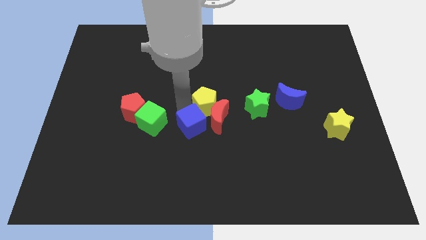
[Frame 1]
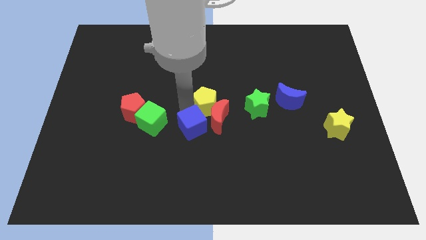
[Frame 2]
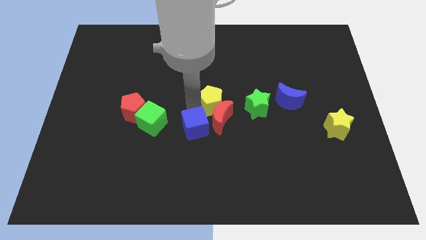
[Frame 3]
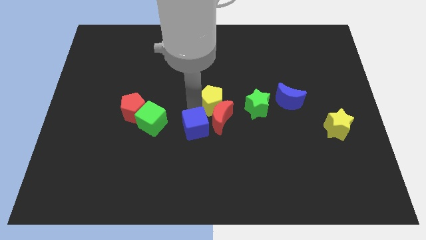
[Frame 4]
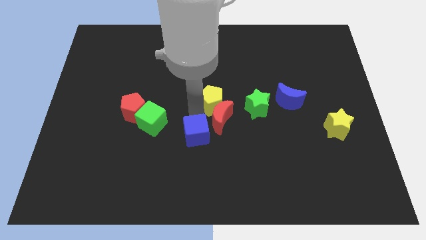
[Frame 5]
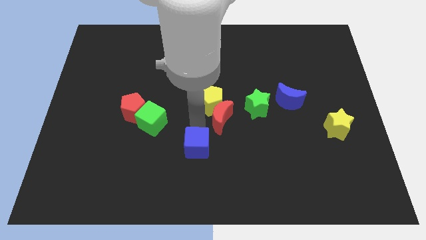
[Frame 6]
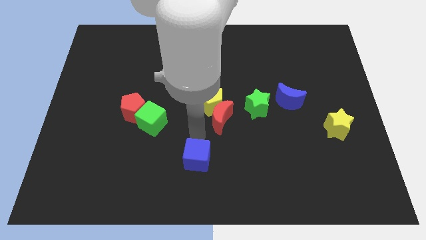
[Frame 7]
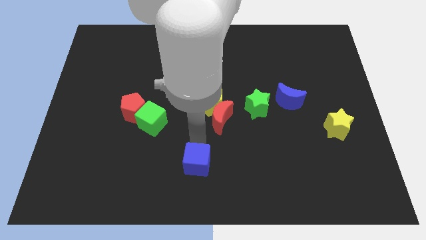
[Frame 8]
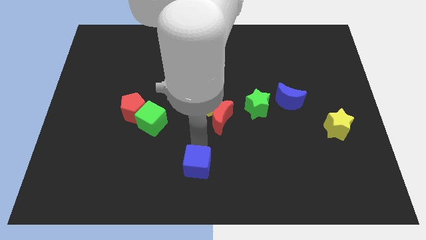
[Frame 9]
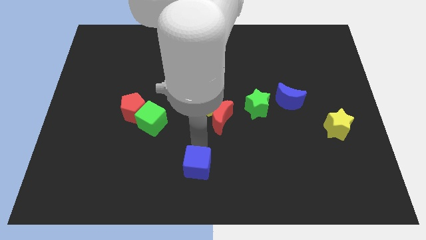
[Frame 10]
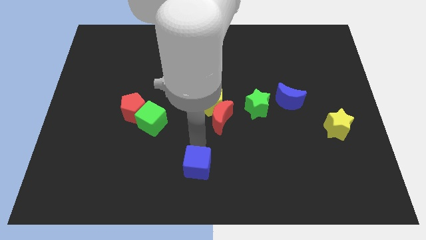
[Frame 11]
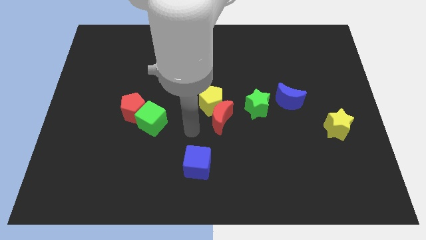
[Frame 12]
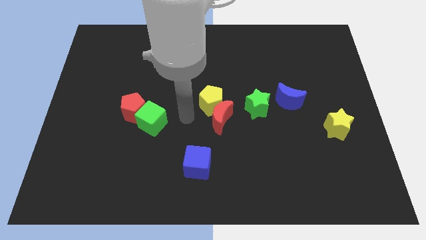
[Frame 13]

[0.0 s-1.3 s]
slightly push the blue cube towards the down

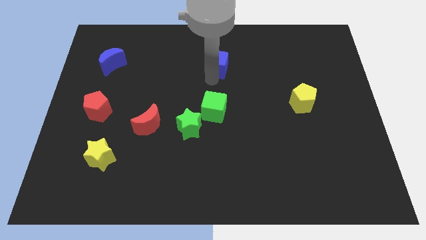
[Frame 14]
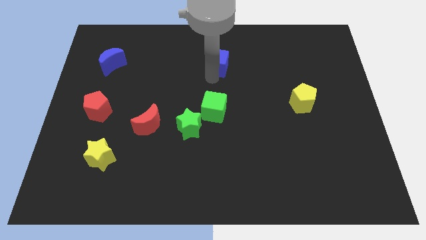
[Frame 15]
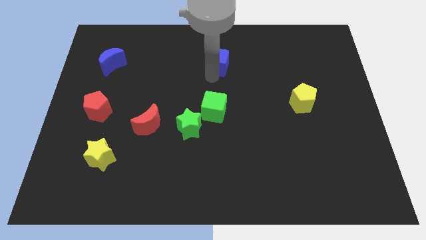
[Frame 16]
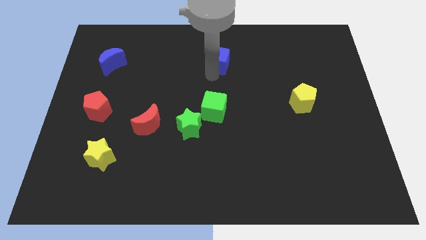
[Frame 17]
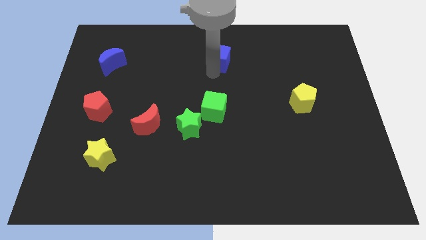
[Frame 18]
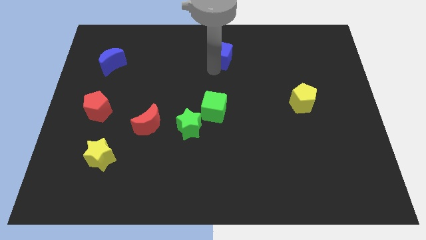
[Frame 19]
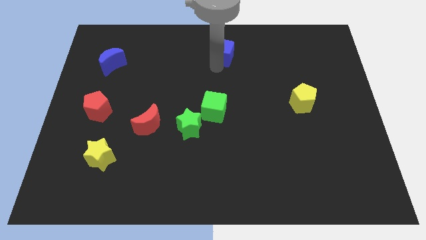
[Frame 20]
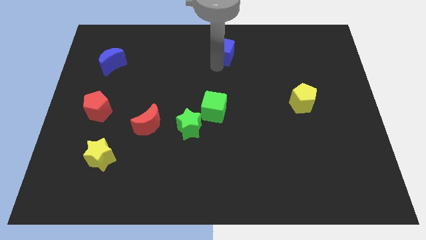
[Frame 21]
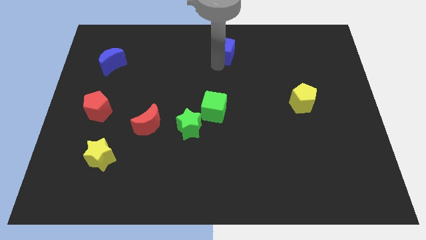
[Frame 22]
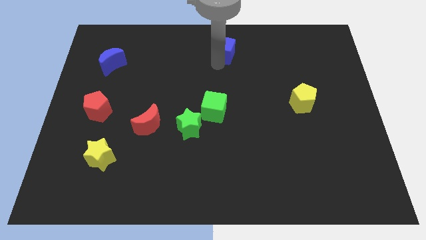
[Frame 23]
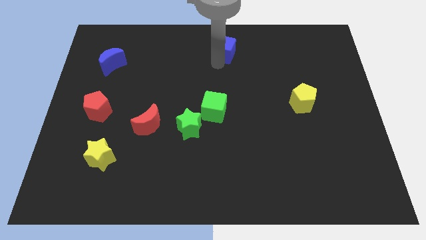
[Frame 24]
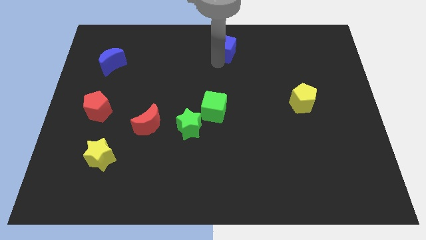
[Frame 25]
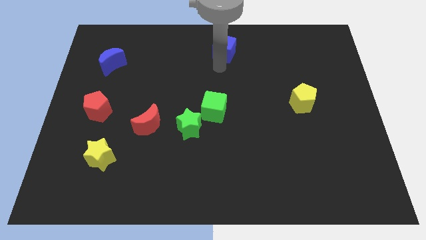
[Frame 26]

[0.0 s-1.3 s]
push blue cube towards top right

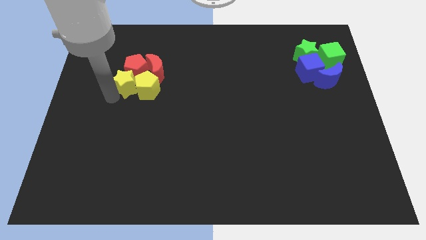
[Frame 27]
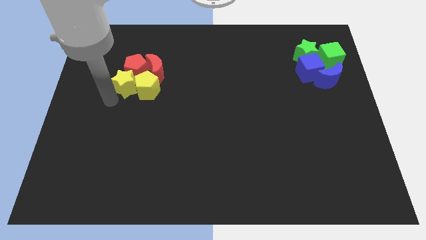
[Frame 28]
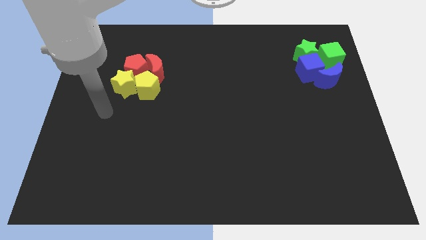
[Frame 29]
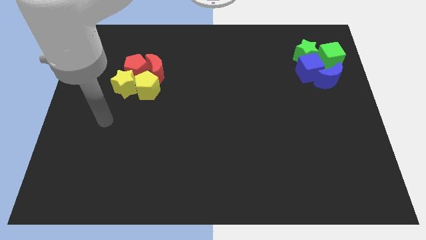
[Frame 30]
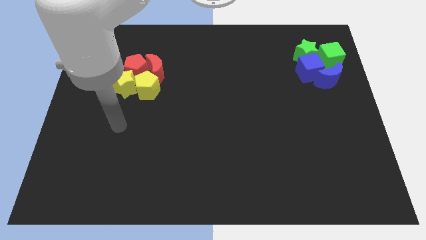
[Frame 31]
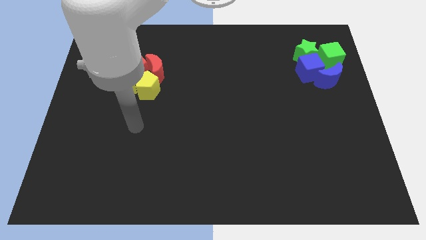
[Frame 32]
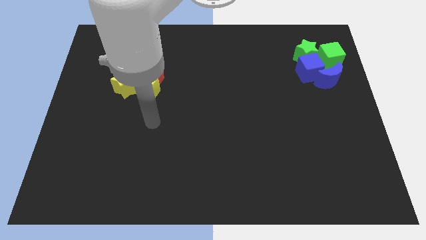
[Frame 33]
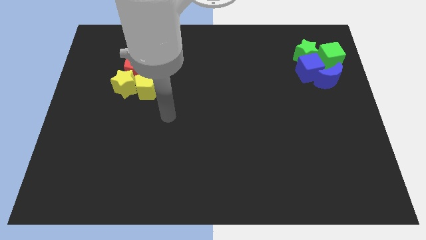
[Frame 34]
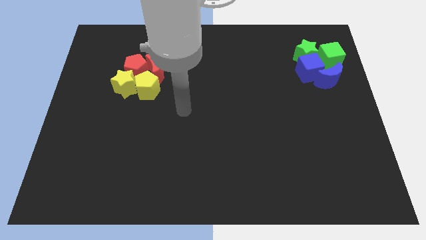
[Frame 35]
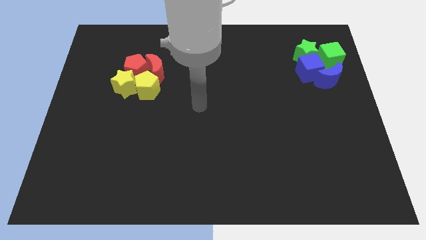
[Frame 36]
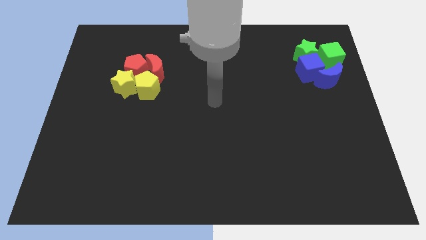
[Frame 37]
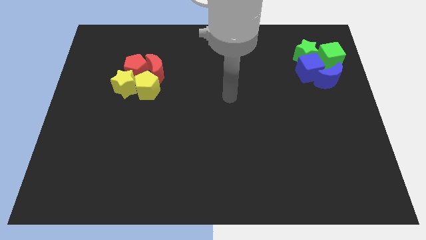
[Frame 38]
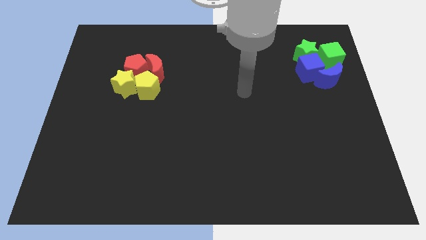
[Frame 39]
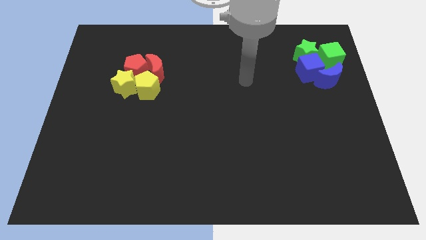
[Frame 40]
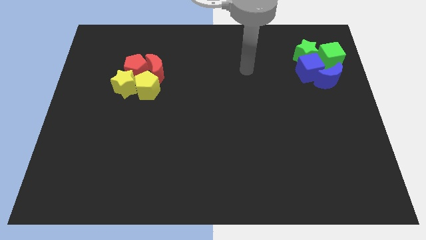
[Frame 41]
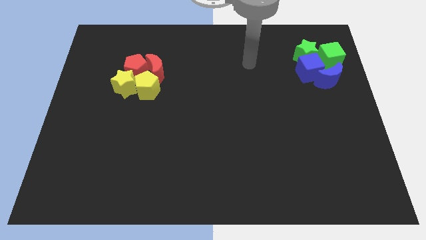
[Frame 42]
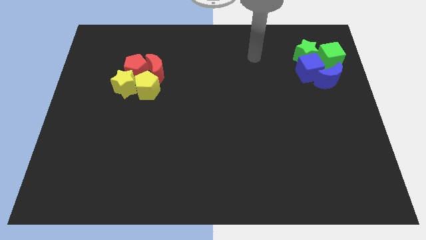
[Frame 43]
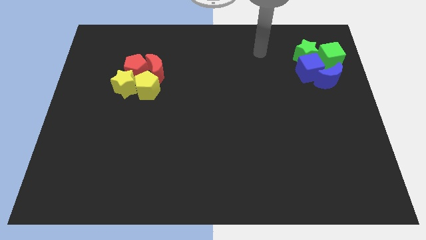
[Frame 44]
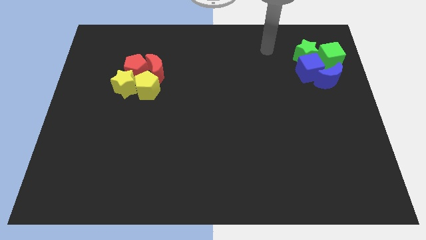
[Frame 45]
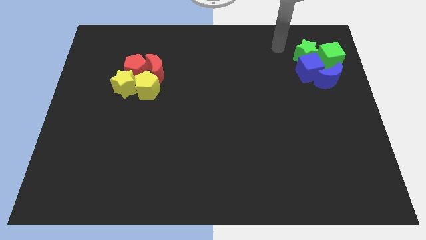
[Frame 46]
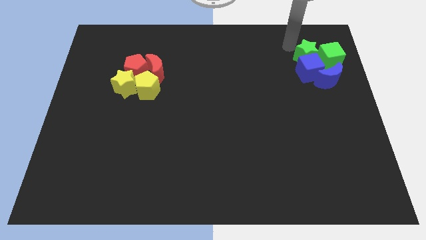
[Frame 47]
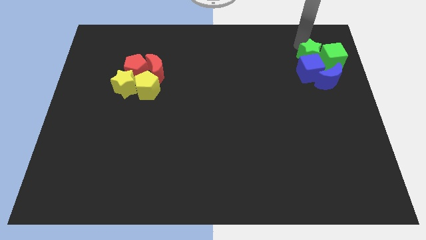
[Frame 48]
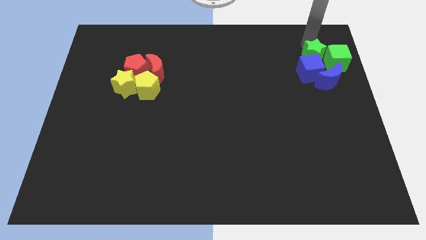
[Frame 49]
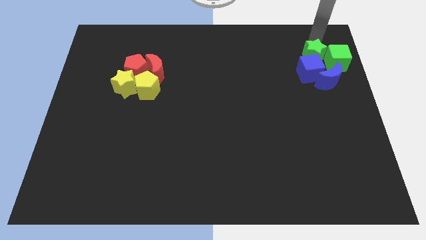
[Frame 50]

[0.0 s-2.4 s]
slightly push the green and blue blocks towards the right side

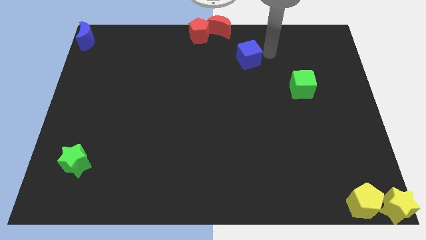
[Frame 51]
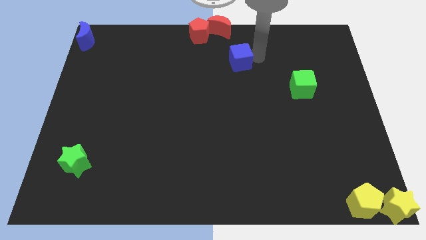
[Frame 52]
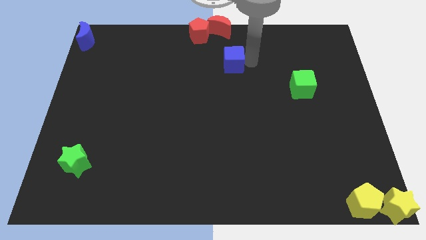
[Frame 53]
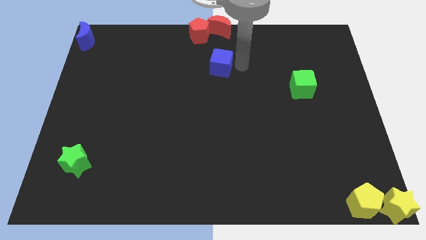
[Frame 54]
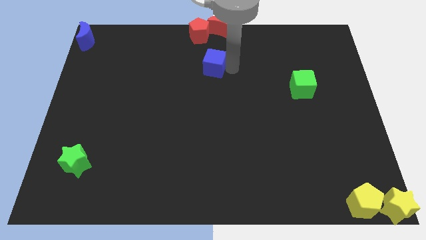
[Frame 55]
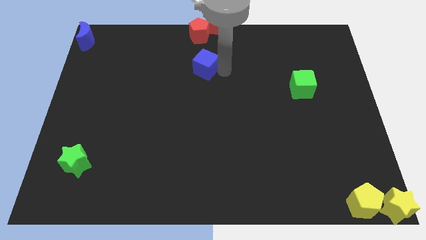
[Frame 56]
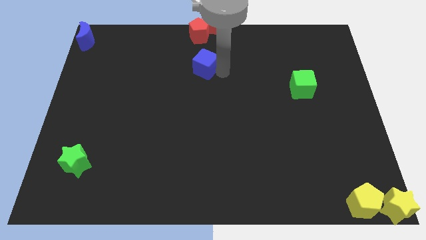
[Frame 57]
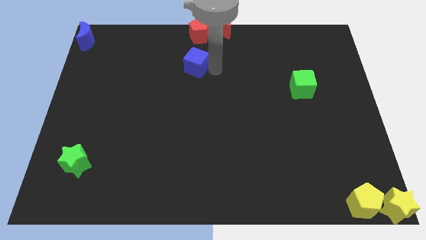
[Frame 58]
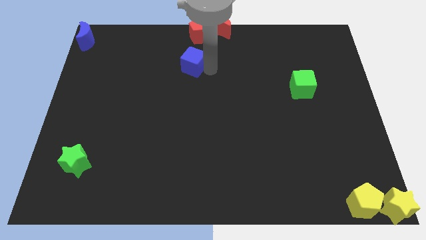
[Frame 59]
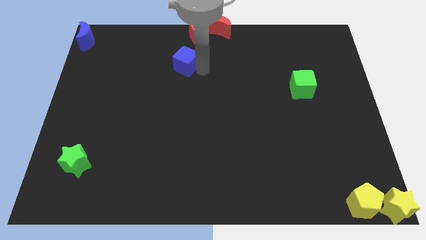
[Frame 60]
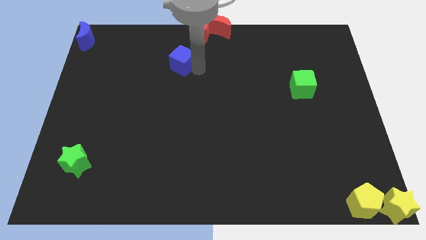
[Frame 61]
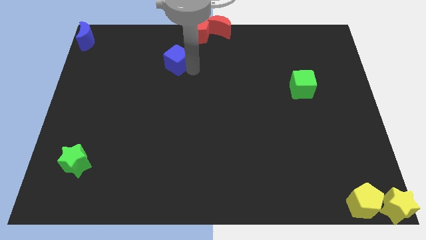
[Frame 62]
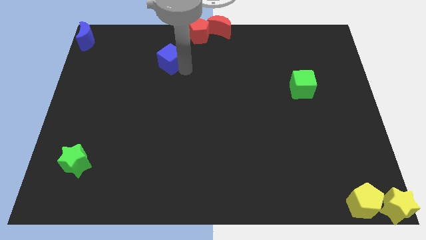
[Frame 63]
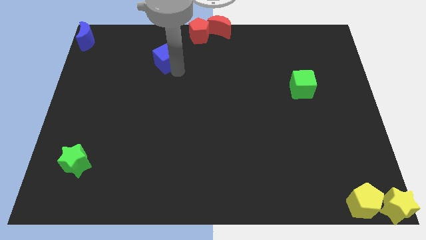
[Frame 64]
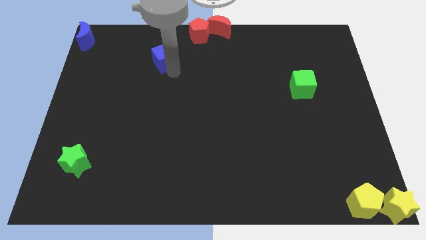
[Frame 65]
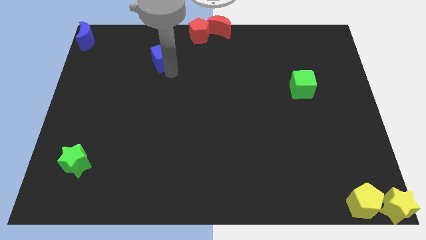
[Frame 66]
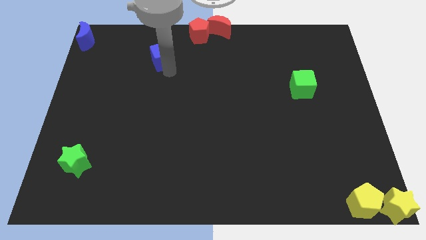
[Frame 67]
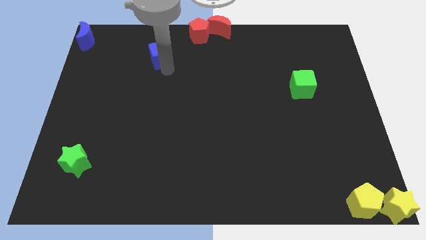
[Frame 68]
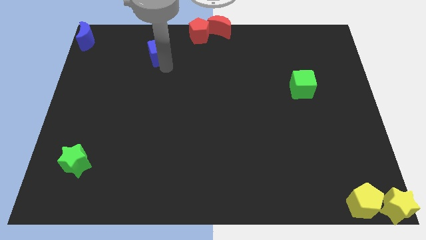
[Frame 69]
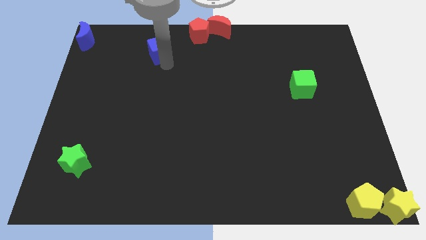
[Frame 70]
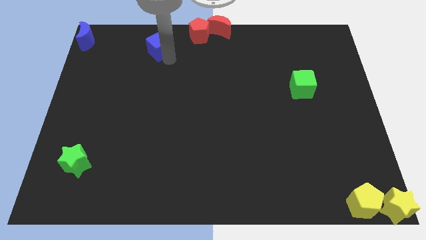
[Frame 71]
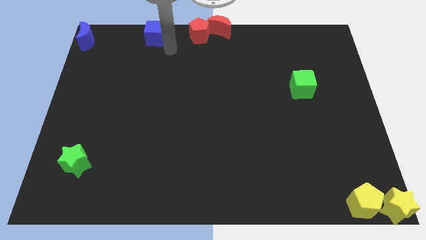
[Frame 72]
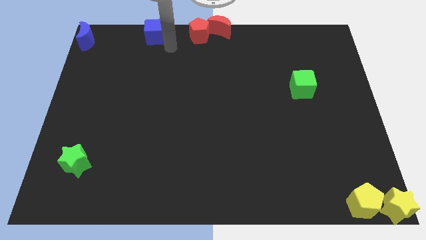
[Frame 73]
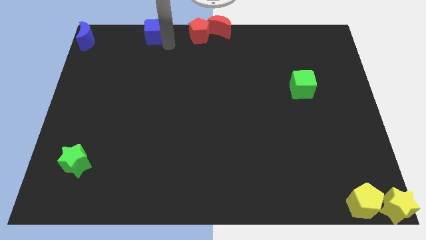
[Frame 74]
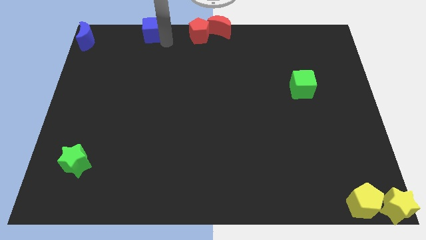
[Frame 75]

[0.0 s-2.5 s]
place the blue cube left to the red pentagon

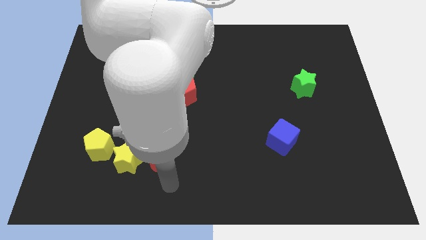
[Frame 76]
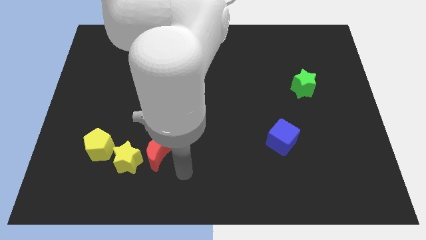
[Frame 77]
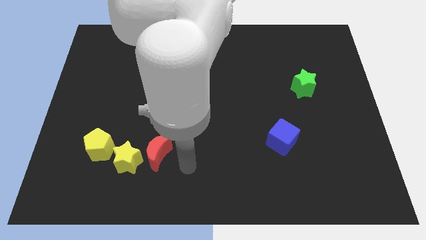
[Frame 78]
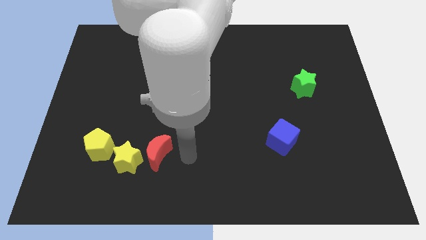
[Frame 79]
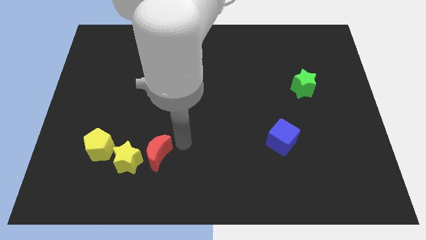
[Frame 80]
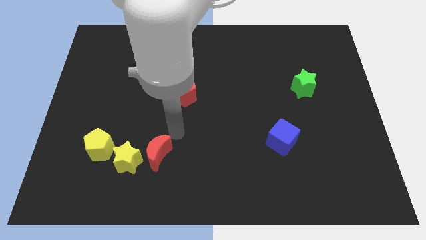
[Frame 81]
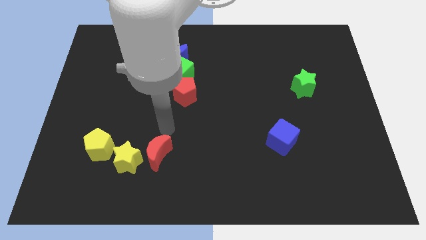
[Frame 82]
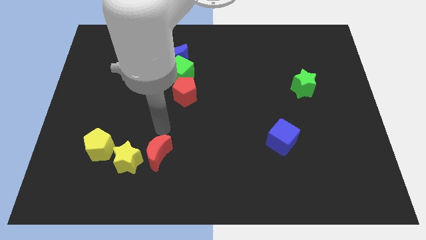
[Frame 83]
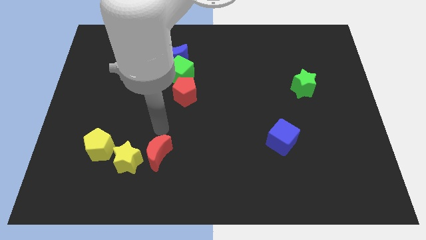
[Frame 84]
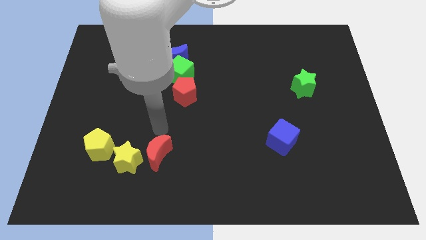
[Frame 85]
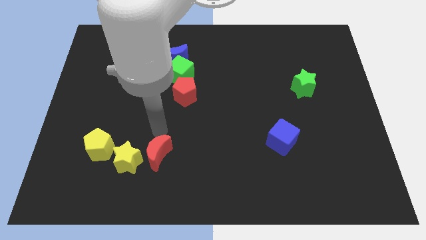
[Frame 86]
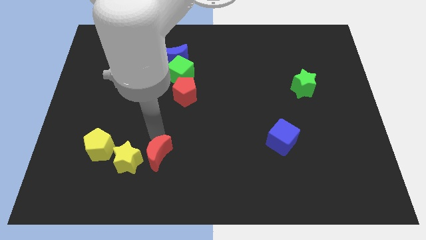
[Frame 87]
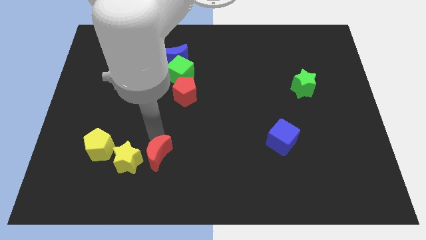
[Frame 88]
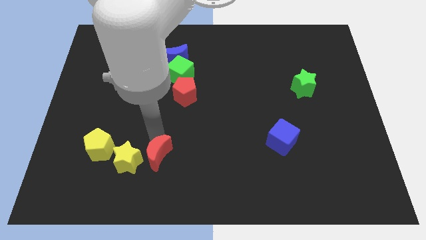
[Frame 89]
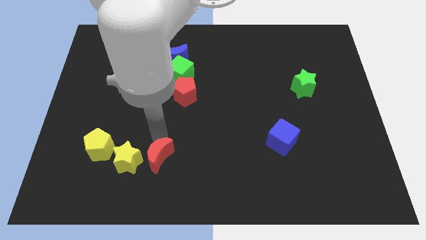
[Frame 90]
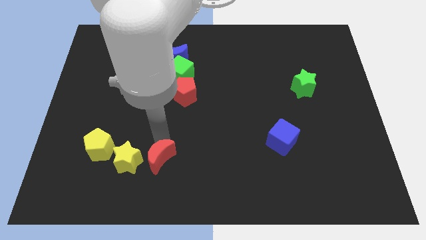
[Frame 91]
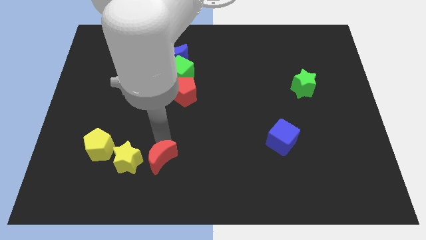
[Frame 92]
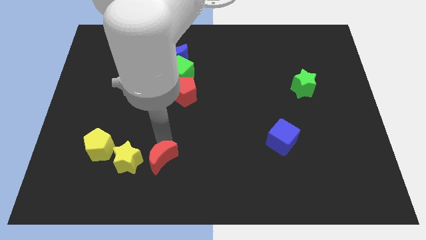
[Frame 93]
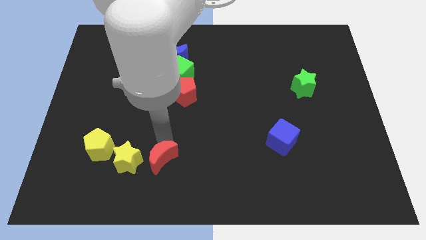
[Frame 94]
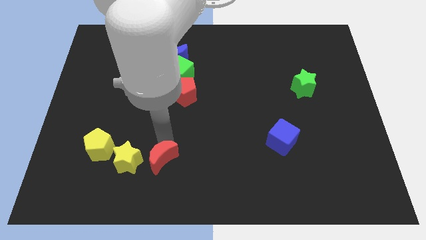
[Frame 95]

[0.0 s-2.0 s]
push the red moon slightly to the bottom
